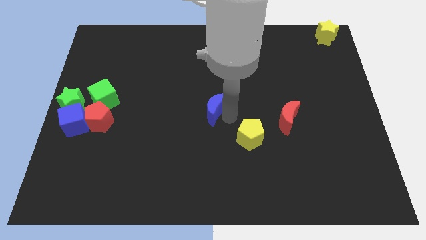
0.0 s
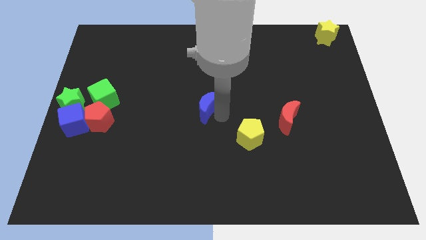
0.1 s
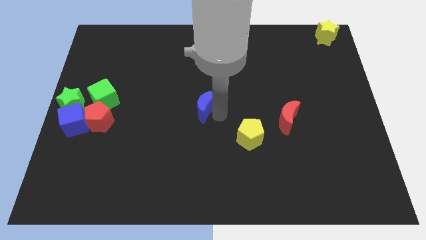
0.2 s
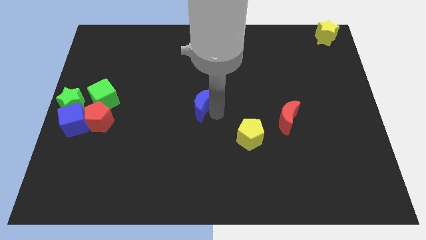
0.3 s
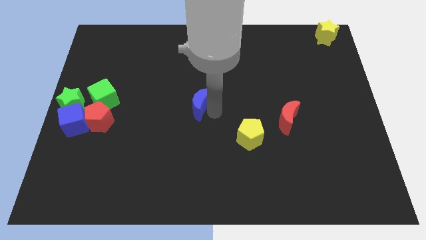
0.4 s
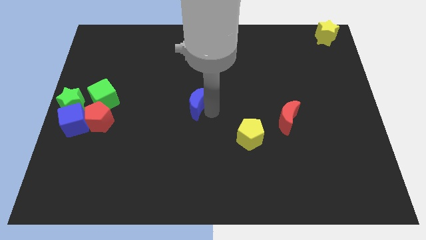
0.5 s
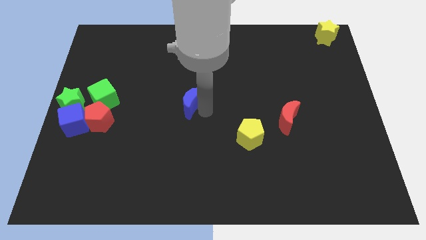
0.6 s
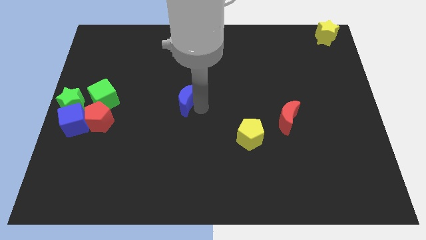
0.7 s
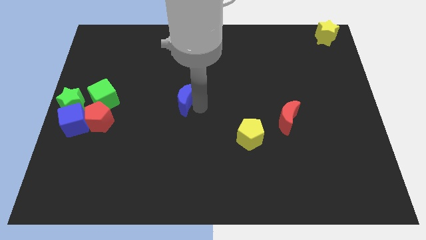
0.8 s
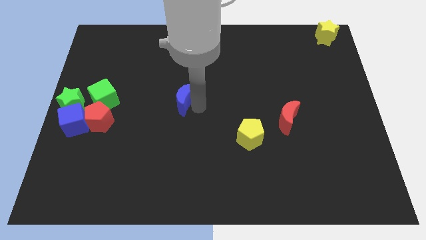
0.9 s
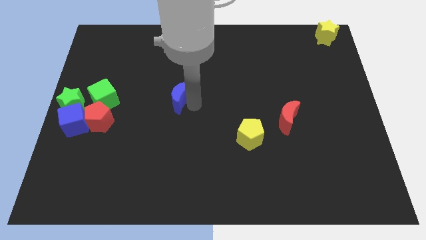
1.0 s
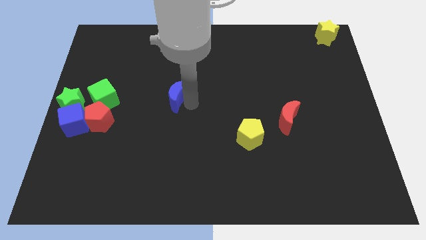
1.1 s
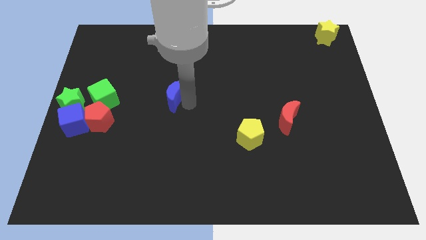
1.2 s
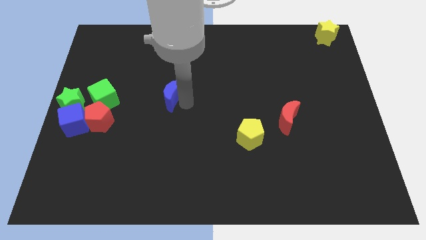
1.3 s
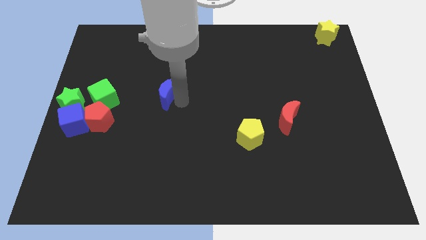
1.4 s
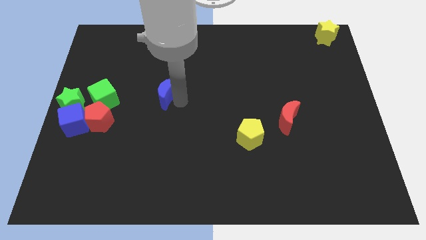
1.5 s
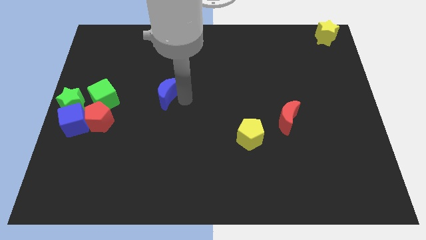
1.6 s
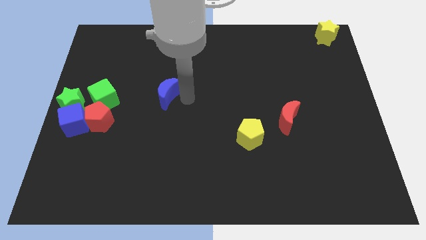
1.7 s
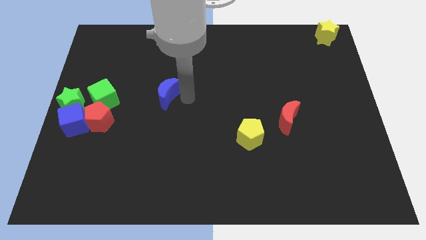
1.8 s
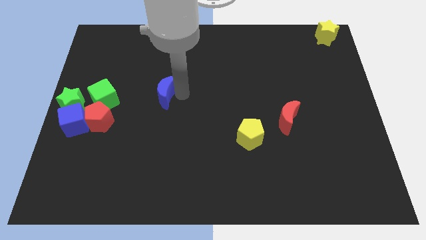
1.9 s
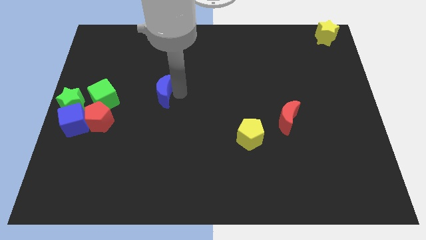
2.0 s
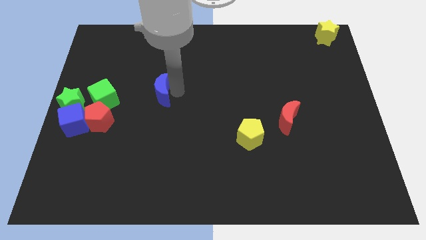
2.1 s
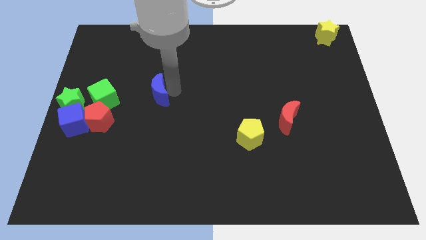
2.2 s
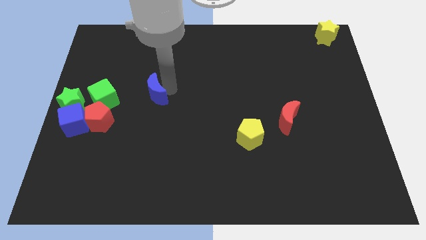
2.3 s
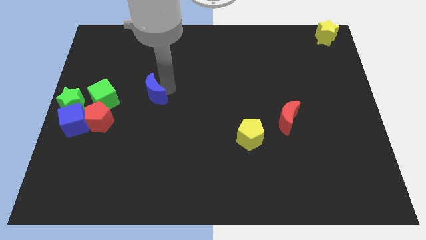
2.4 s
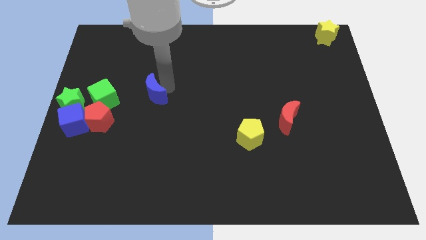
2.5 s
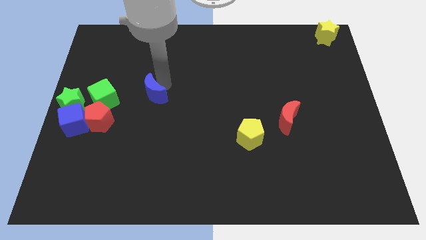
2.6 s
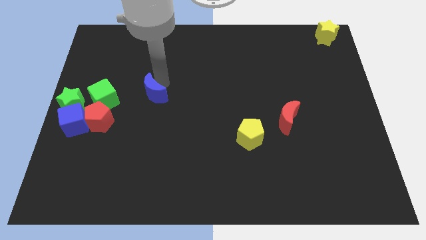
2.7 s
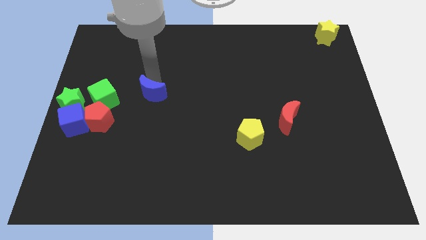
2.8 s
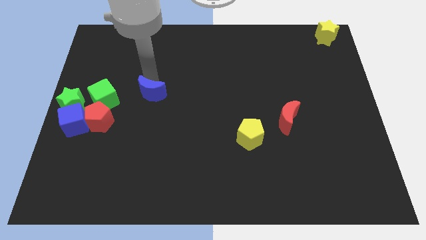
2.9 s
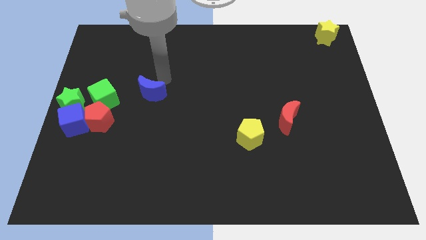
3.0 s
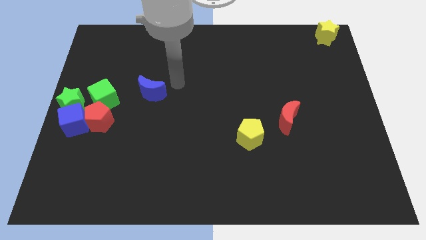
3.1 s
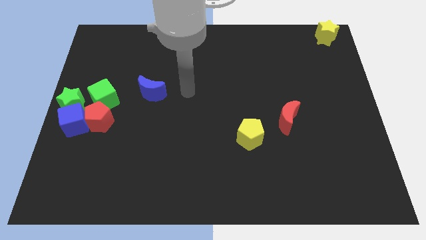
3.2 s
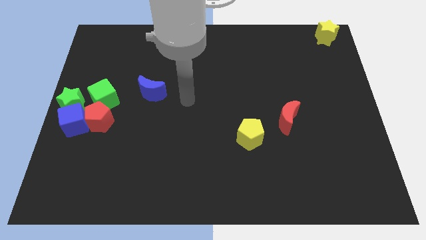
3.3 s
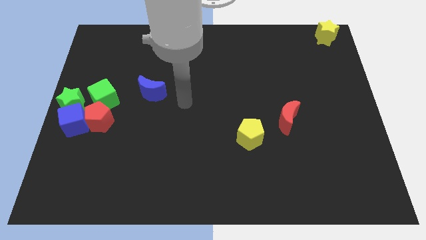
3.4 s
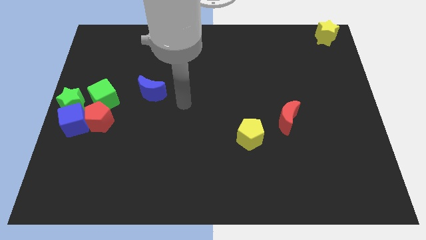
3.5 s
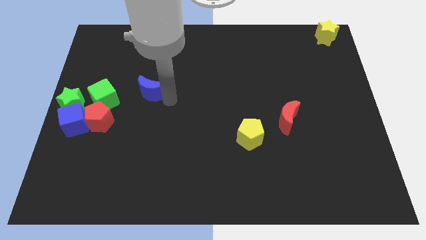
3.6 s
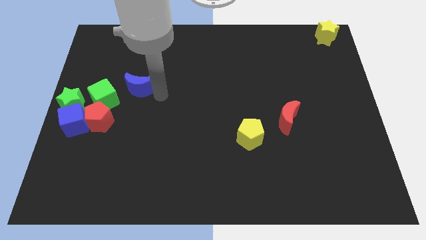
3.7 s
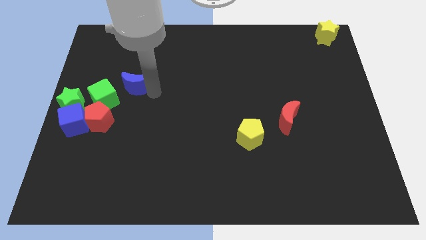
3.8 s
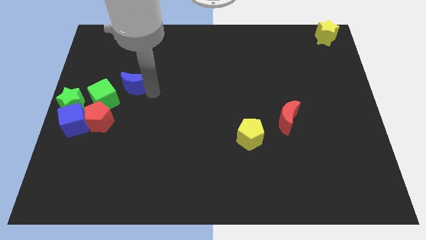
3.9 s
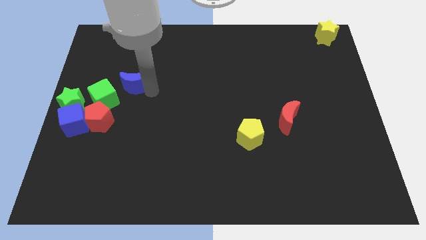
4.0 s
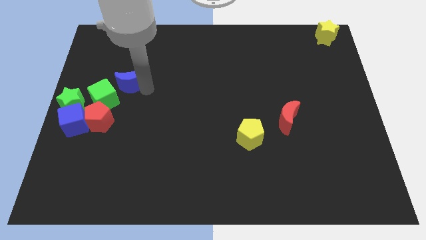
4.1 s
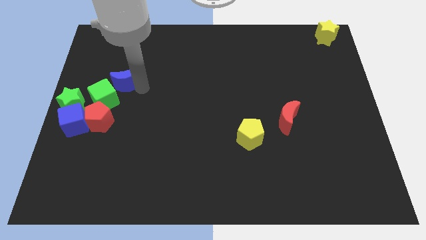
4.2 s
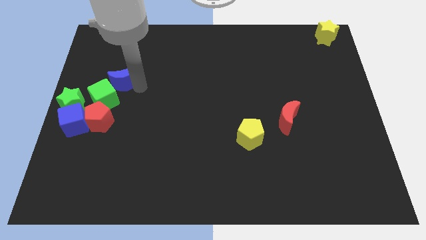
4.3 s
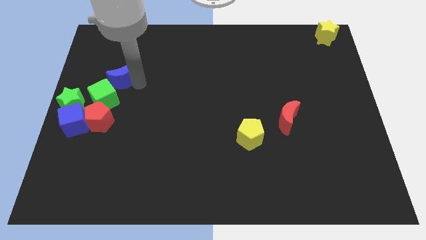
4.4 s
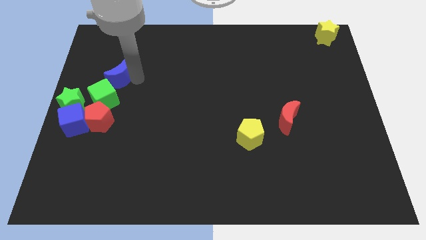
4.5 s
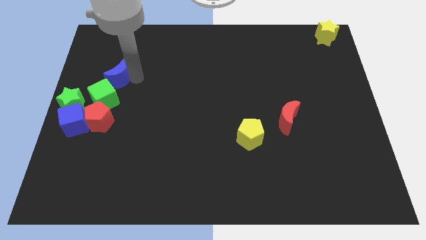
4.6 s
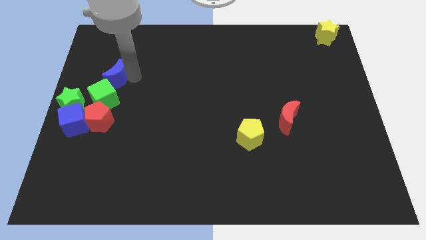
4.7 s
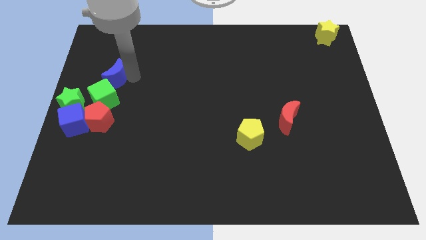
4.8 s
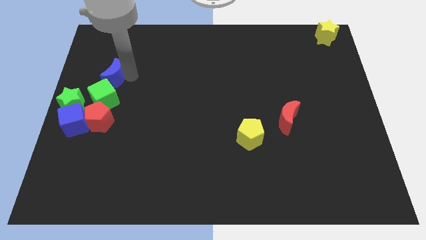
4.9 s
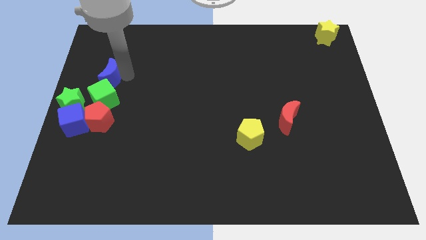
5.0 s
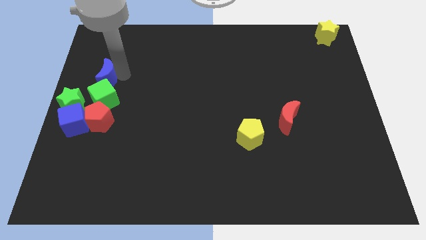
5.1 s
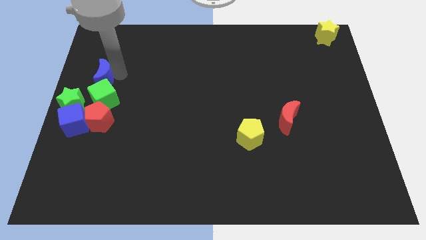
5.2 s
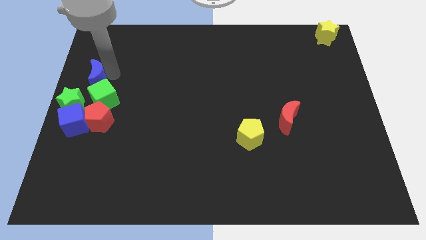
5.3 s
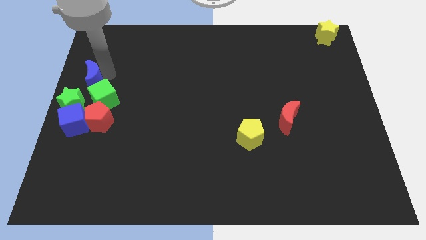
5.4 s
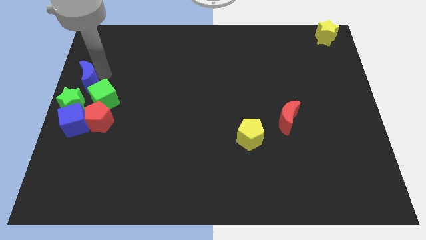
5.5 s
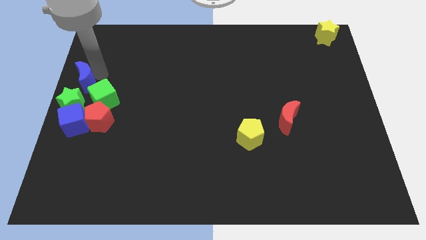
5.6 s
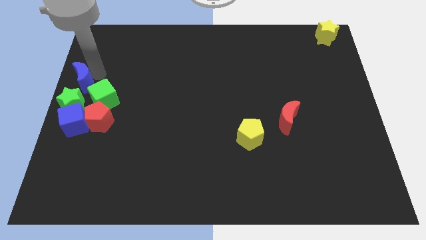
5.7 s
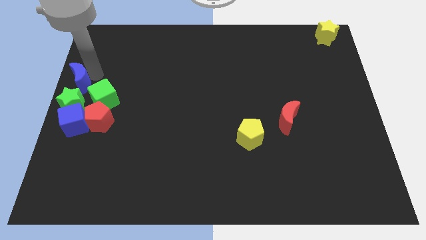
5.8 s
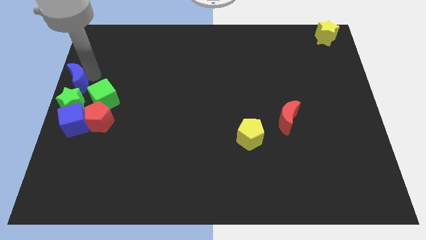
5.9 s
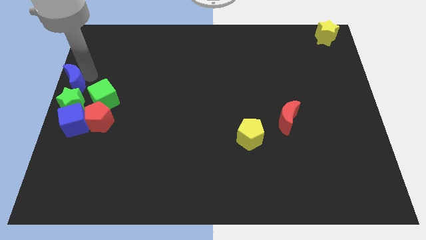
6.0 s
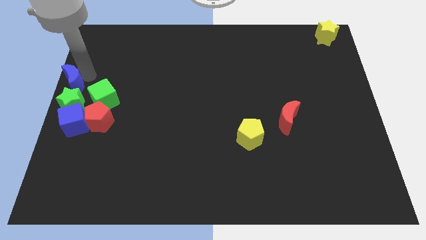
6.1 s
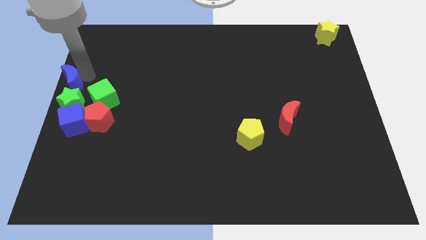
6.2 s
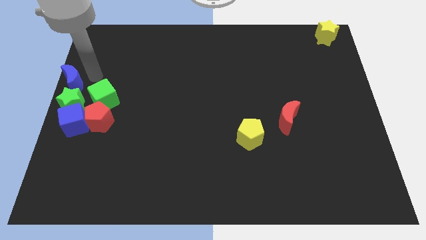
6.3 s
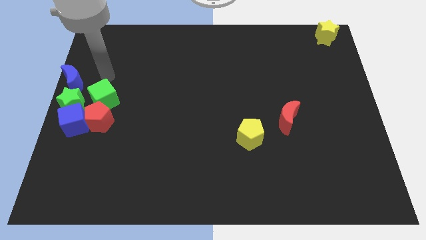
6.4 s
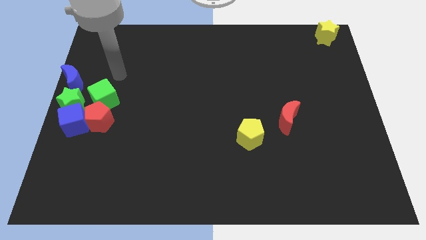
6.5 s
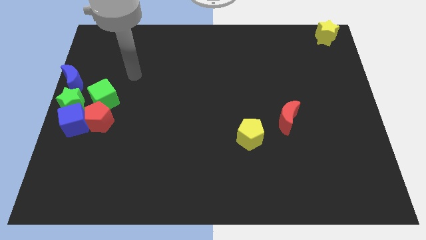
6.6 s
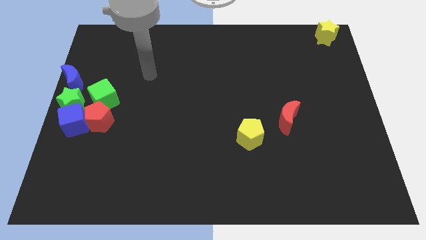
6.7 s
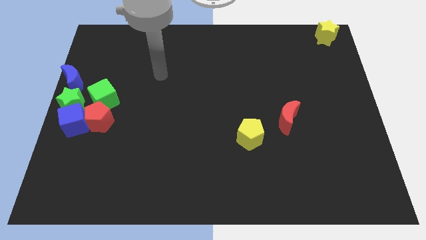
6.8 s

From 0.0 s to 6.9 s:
move blue moon to the top of the green star

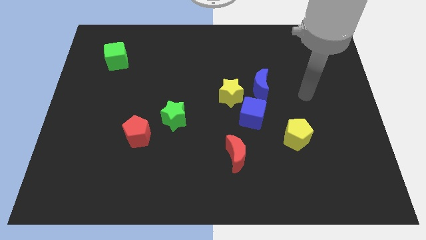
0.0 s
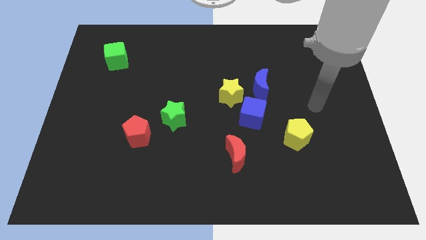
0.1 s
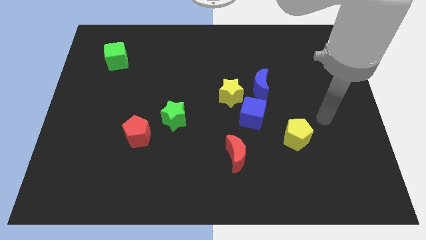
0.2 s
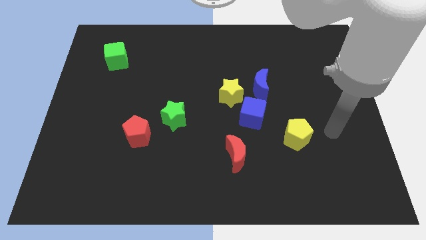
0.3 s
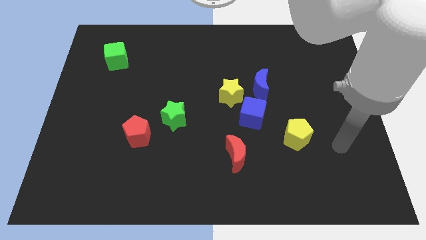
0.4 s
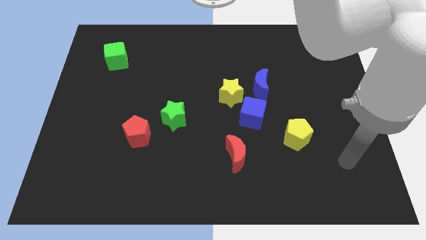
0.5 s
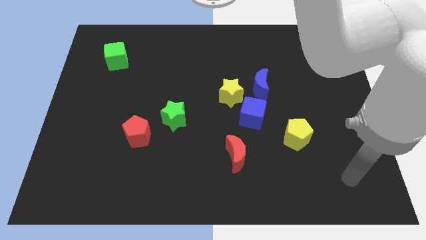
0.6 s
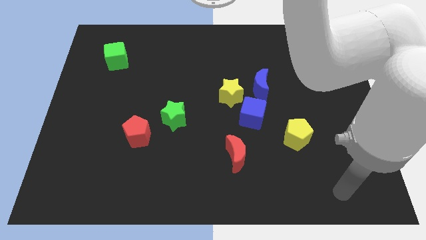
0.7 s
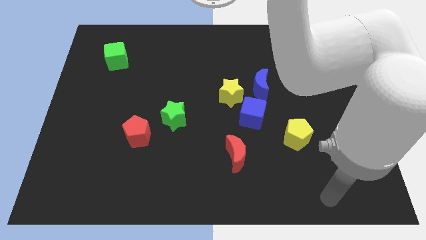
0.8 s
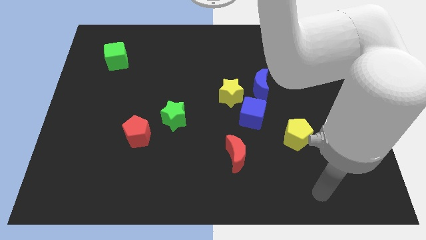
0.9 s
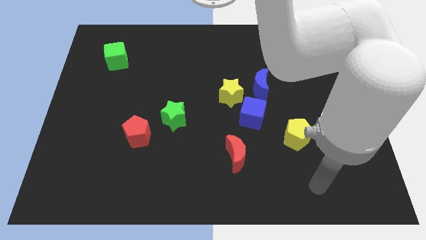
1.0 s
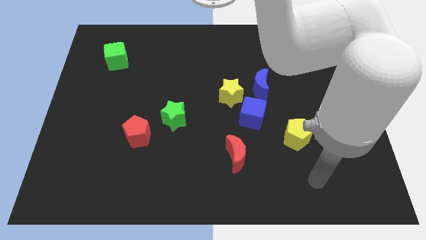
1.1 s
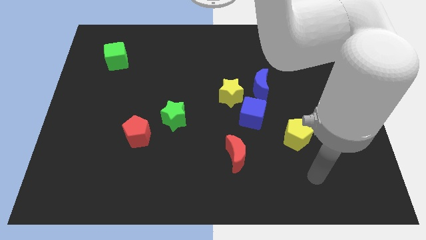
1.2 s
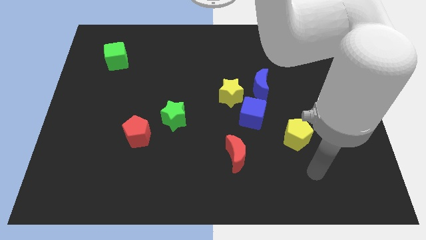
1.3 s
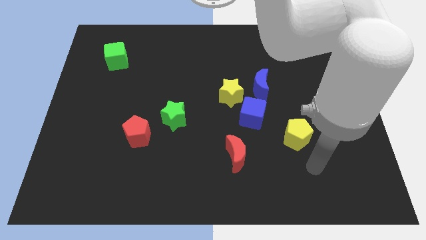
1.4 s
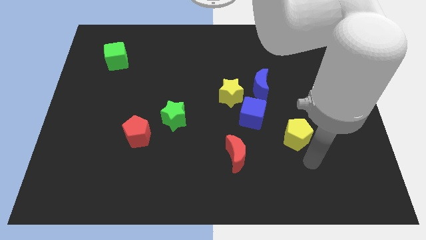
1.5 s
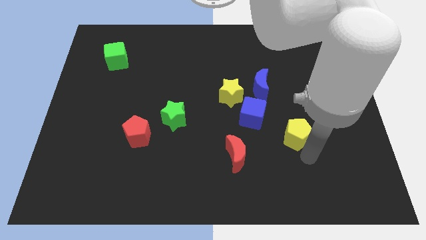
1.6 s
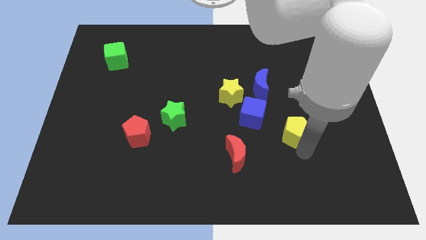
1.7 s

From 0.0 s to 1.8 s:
move the arm to the bottom of the yellow pentagon

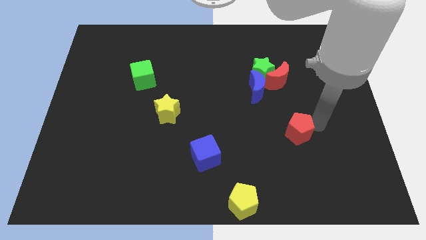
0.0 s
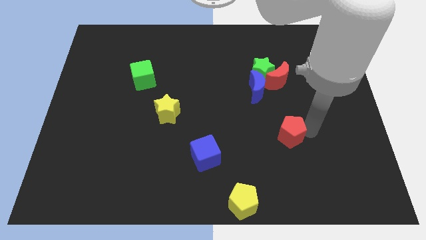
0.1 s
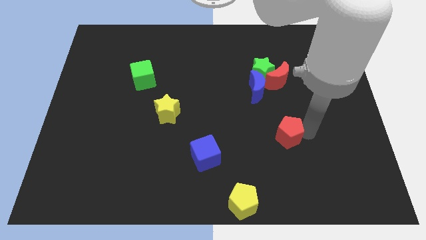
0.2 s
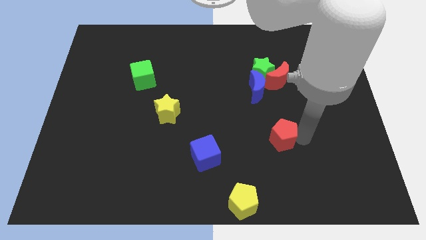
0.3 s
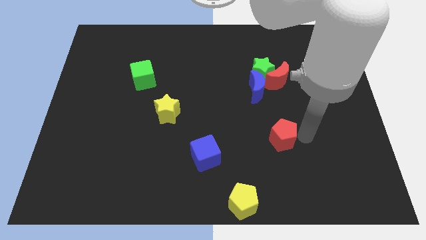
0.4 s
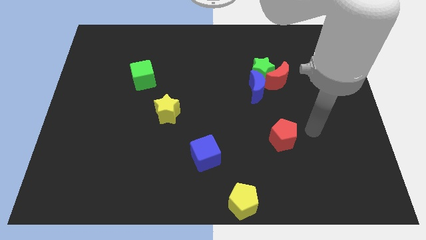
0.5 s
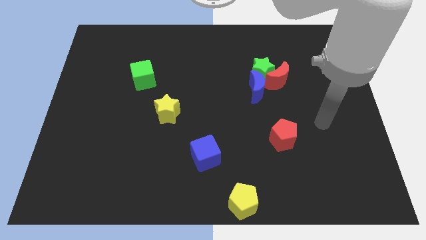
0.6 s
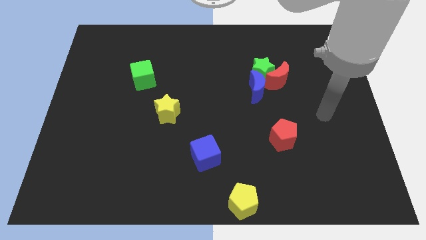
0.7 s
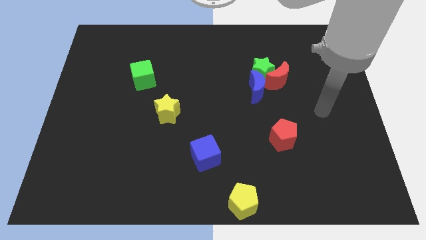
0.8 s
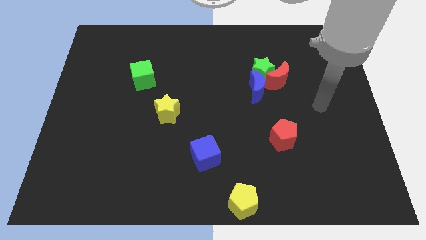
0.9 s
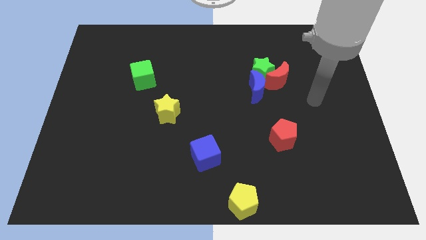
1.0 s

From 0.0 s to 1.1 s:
push the red pentagon towards the blue cube
